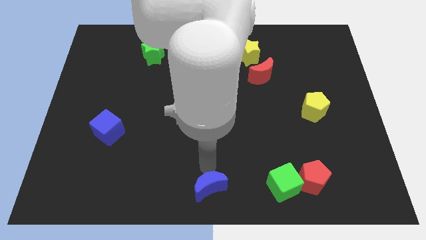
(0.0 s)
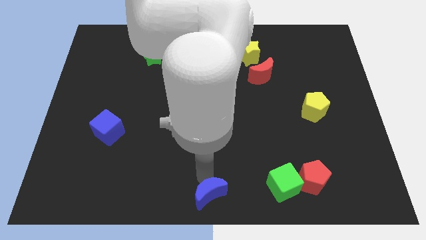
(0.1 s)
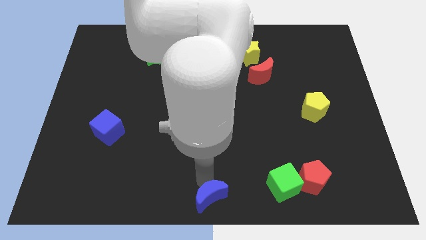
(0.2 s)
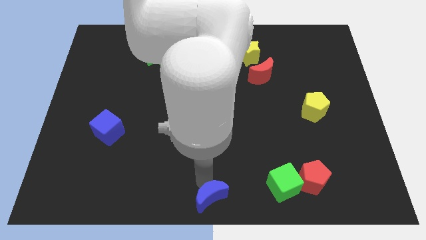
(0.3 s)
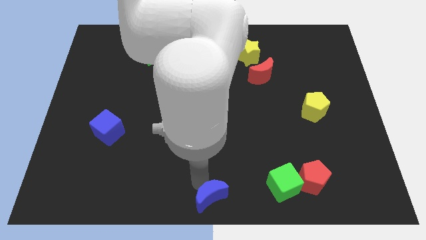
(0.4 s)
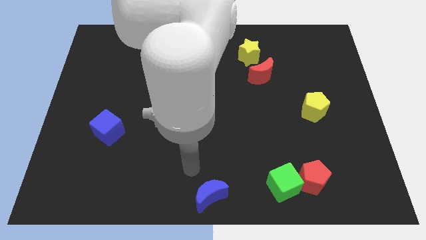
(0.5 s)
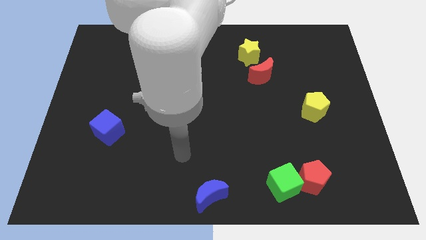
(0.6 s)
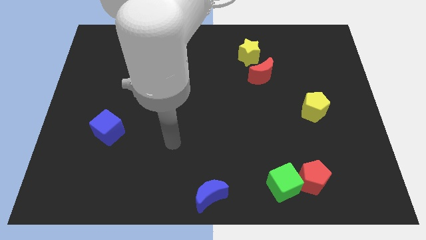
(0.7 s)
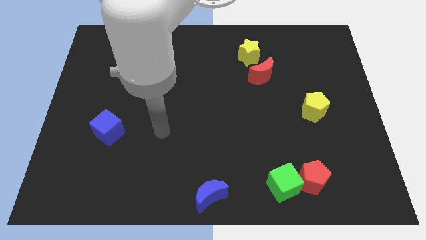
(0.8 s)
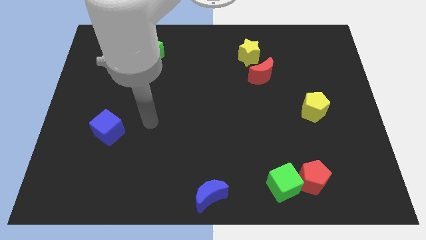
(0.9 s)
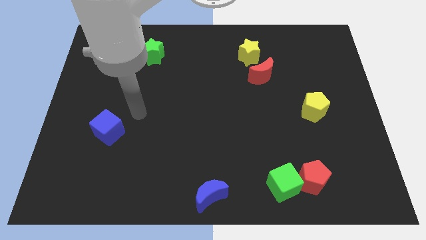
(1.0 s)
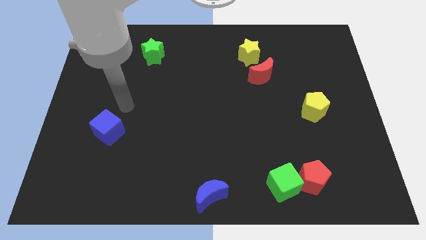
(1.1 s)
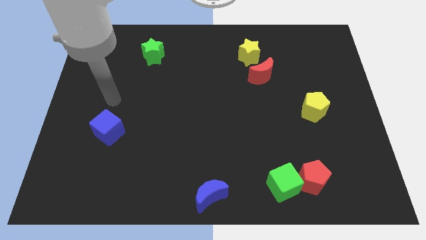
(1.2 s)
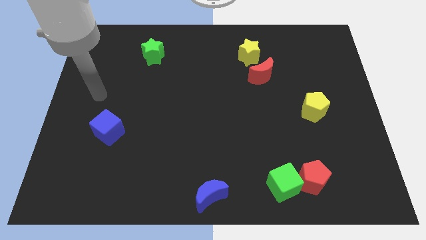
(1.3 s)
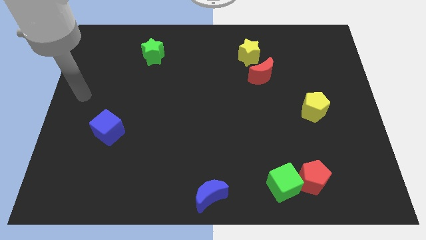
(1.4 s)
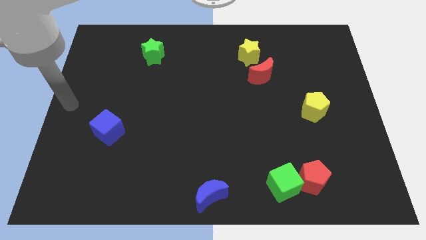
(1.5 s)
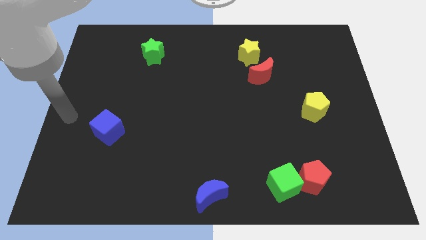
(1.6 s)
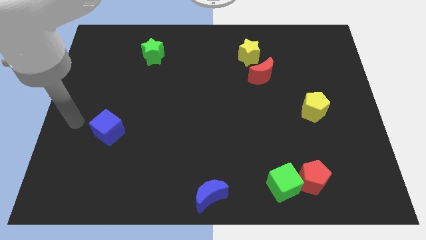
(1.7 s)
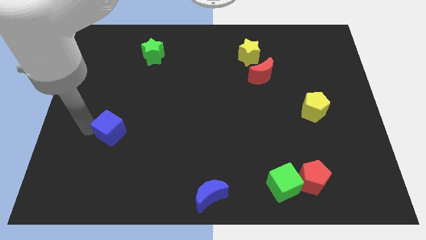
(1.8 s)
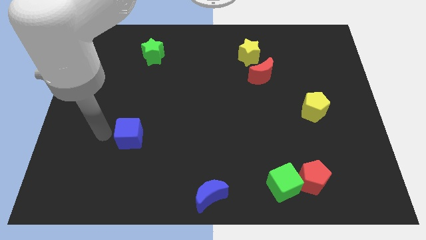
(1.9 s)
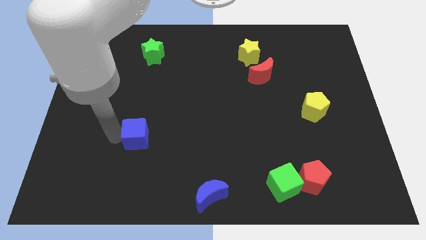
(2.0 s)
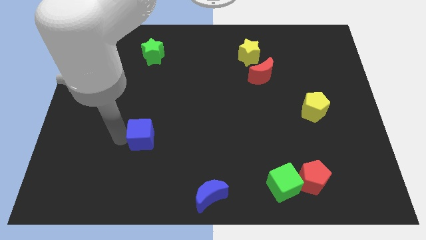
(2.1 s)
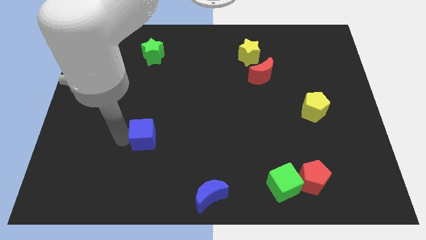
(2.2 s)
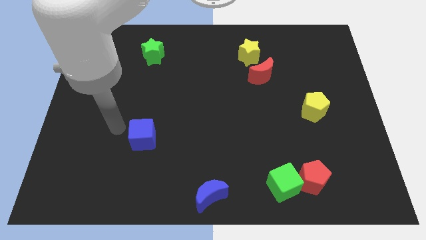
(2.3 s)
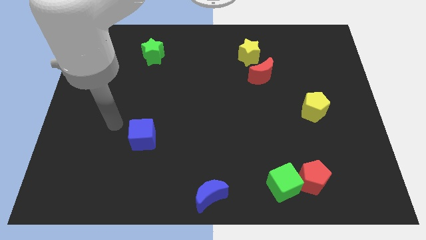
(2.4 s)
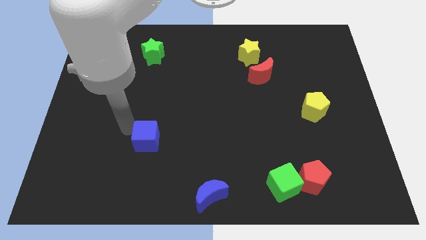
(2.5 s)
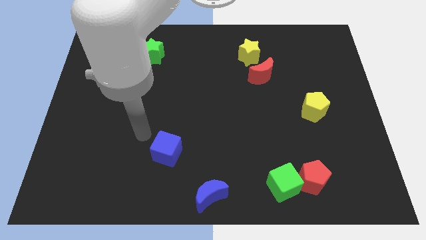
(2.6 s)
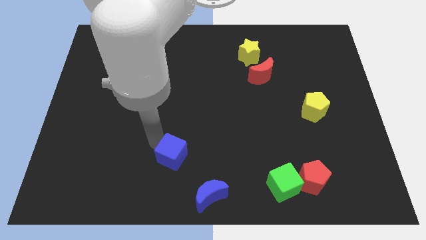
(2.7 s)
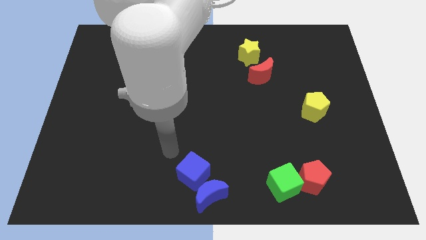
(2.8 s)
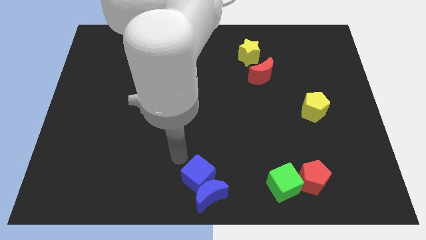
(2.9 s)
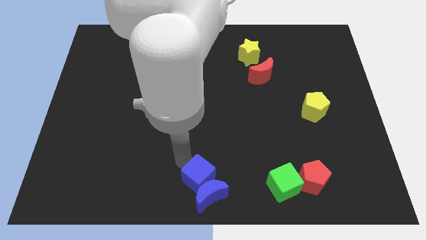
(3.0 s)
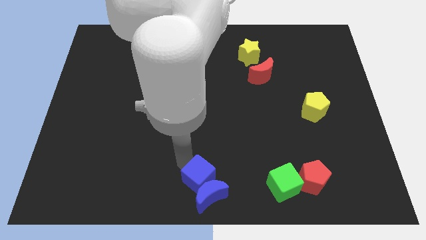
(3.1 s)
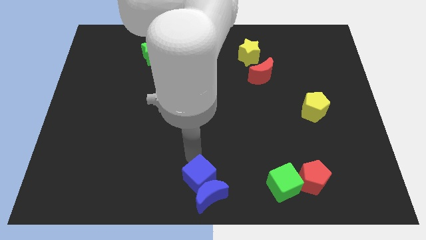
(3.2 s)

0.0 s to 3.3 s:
push the blue cube into the top of the blue crescent

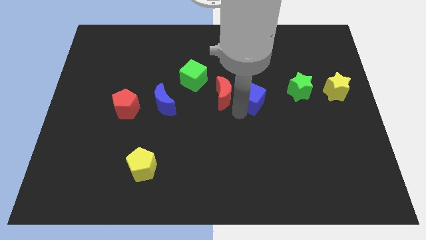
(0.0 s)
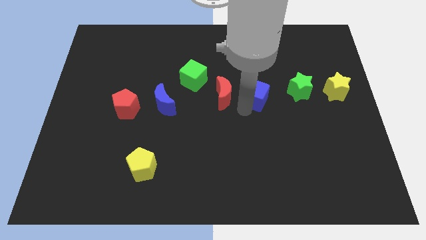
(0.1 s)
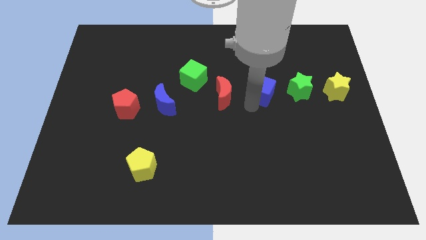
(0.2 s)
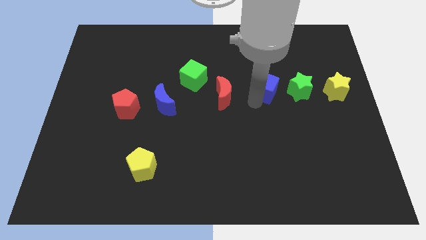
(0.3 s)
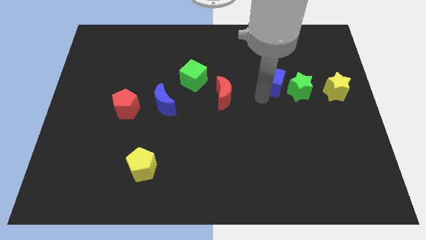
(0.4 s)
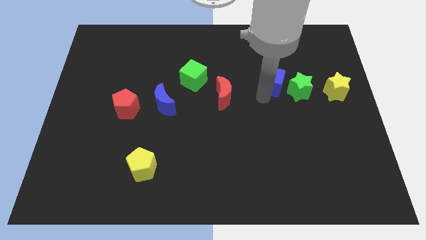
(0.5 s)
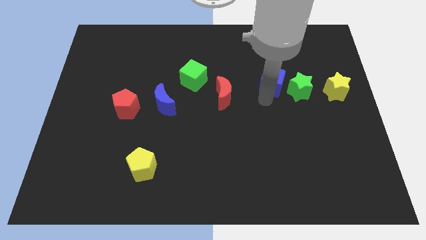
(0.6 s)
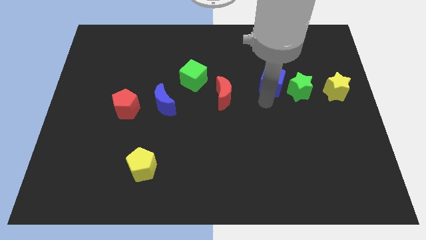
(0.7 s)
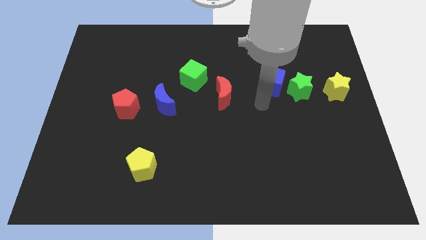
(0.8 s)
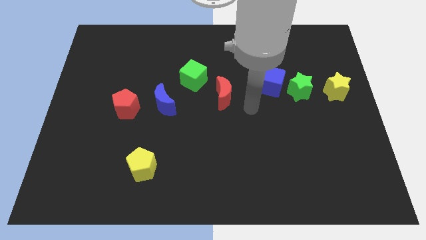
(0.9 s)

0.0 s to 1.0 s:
move blue cube left beside the green star

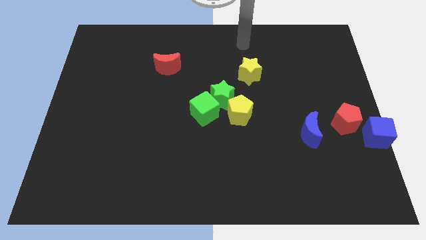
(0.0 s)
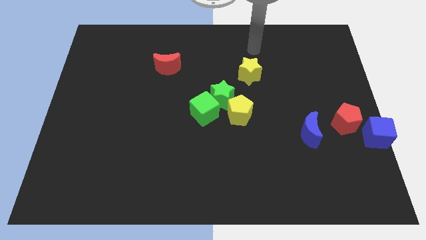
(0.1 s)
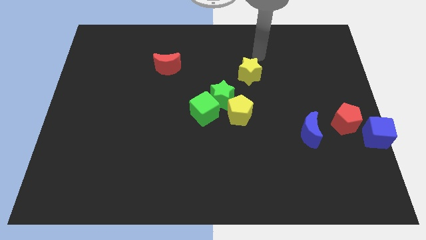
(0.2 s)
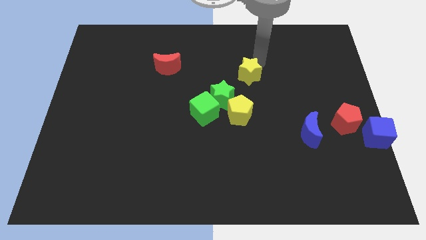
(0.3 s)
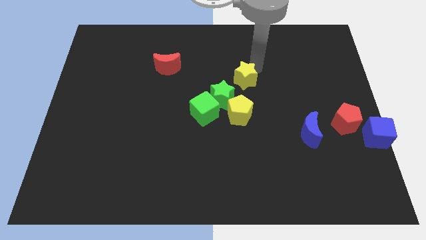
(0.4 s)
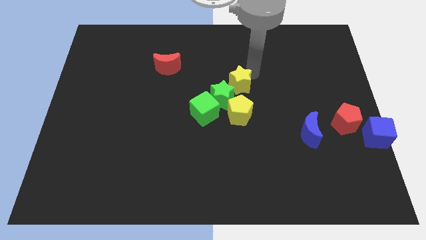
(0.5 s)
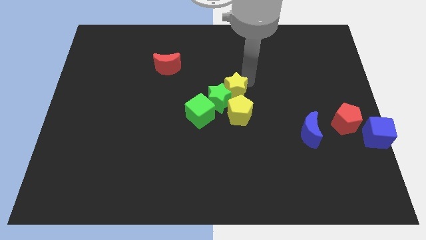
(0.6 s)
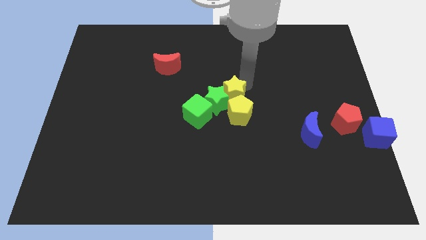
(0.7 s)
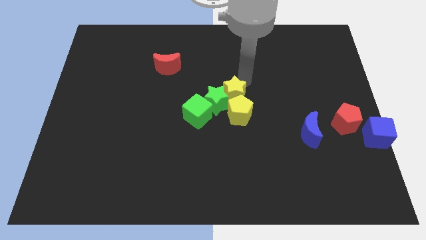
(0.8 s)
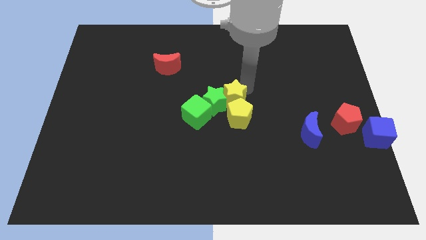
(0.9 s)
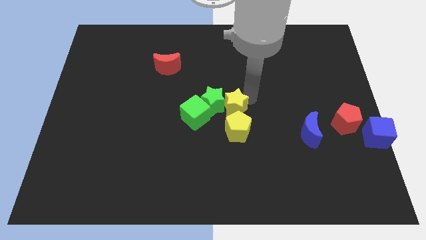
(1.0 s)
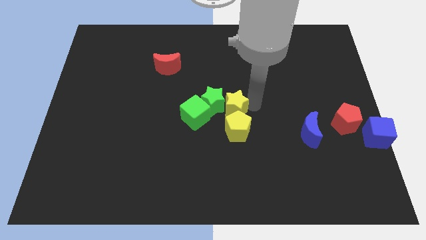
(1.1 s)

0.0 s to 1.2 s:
move the yellow star to the right of the green star

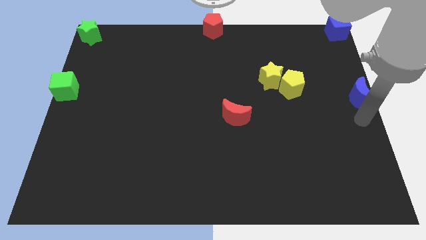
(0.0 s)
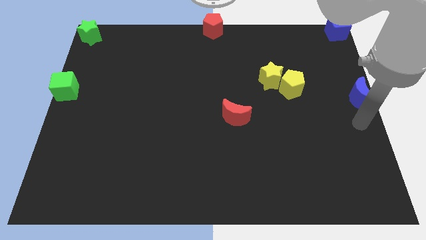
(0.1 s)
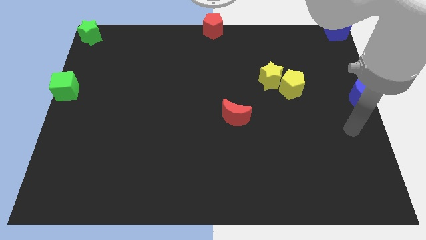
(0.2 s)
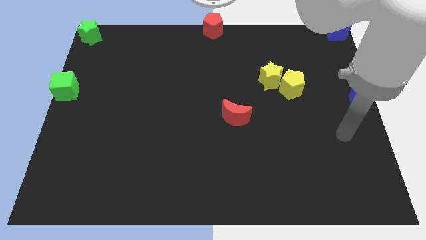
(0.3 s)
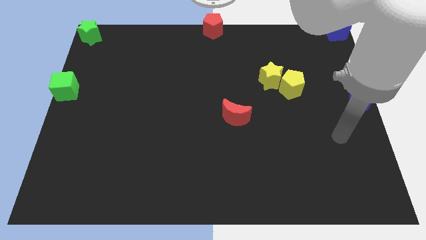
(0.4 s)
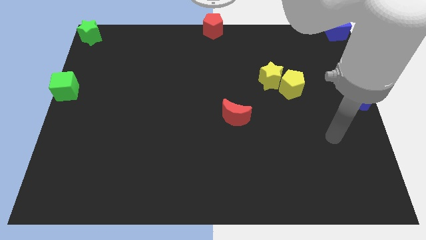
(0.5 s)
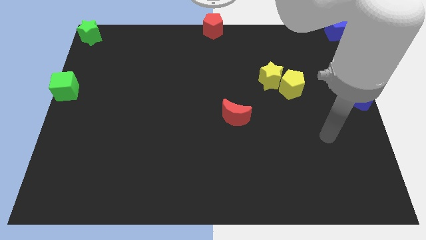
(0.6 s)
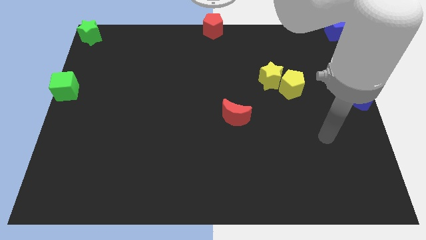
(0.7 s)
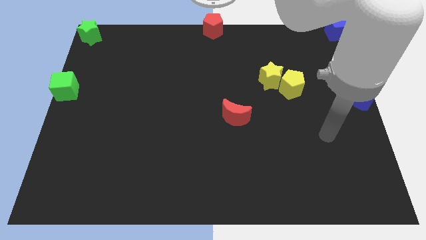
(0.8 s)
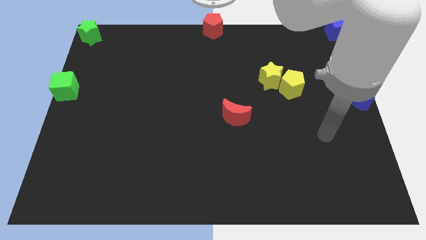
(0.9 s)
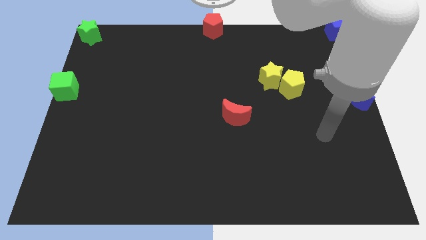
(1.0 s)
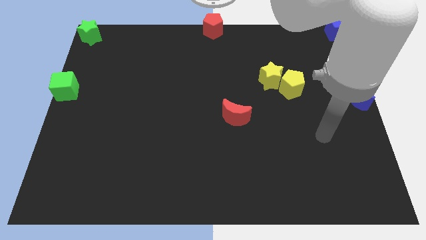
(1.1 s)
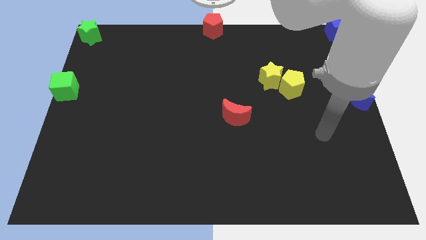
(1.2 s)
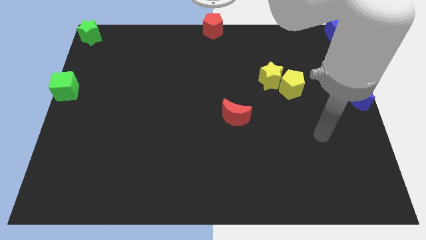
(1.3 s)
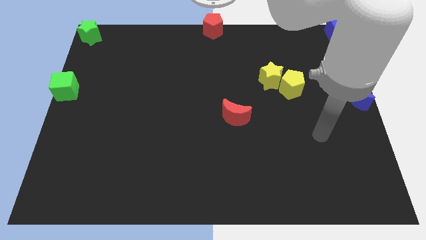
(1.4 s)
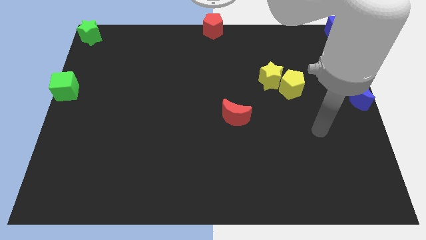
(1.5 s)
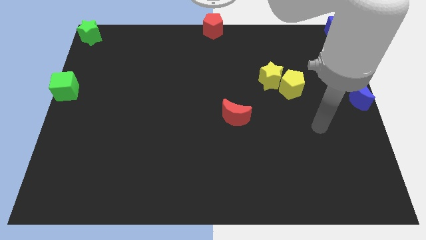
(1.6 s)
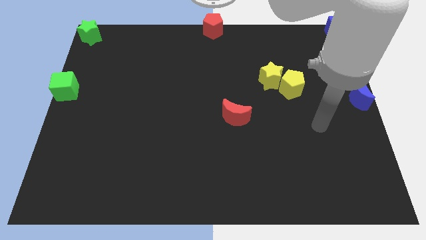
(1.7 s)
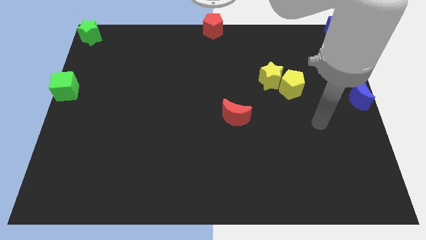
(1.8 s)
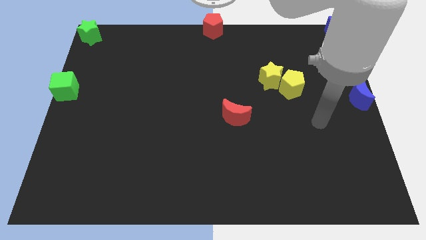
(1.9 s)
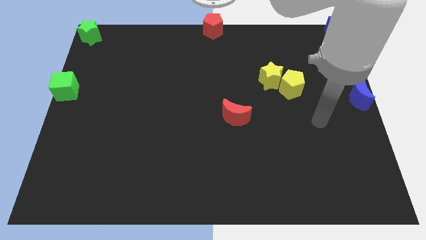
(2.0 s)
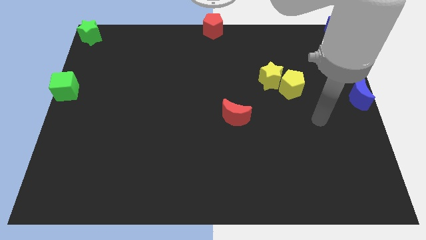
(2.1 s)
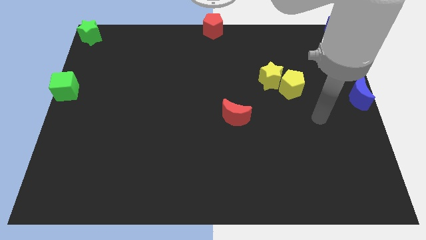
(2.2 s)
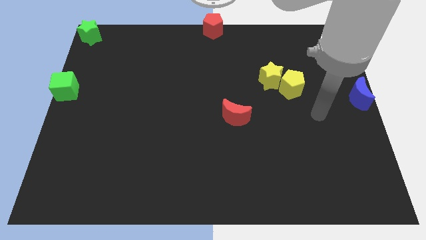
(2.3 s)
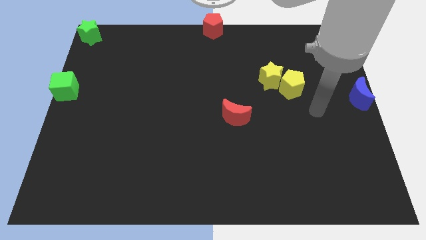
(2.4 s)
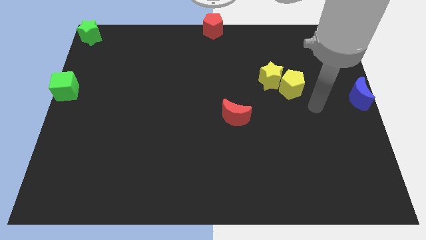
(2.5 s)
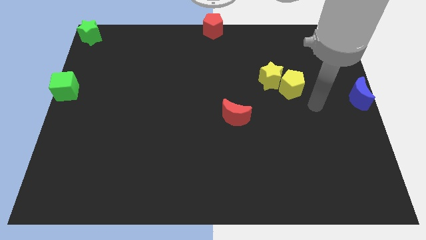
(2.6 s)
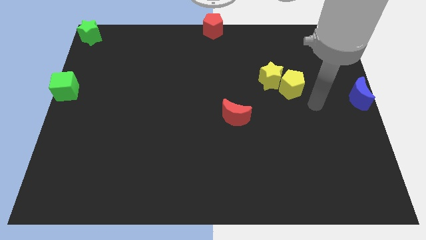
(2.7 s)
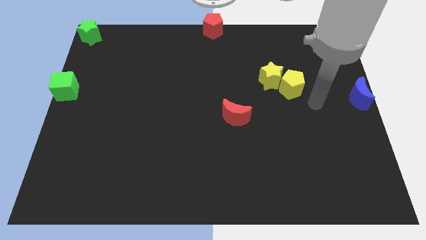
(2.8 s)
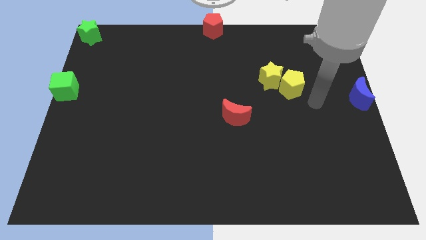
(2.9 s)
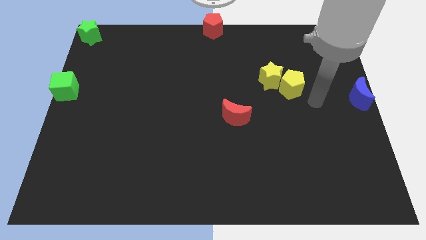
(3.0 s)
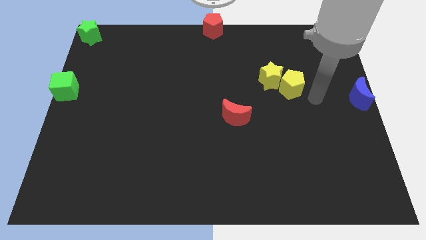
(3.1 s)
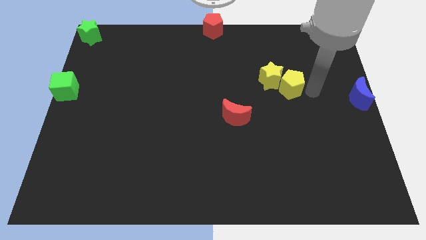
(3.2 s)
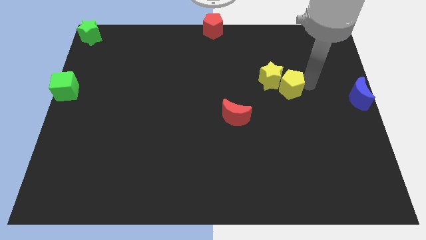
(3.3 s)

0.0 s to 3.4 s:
move the arm right to the yellow pentagon

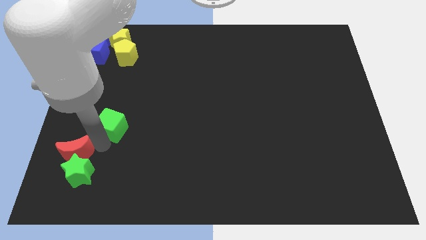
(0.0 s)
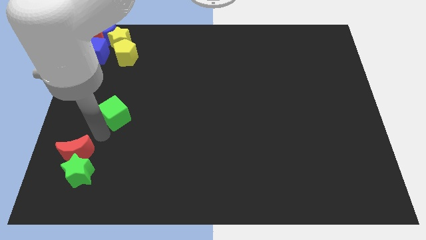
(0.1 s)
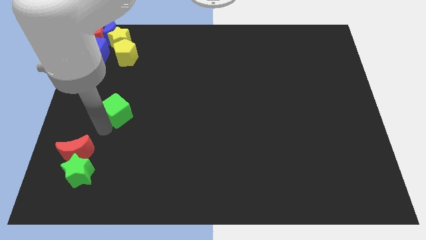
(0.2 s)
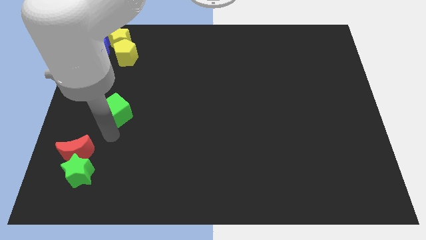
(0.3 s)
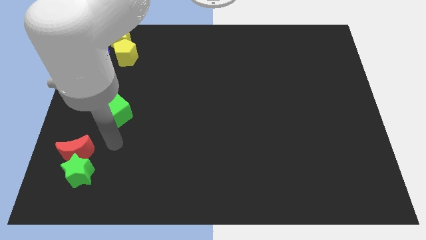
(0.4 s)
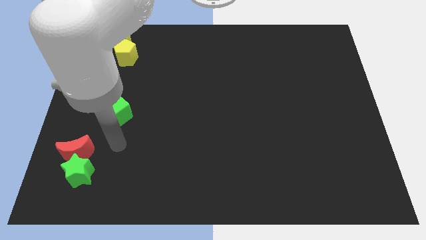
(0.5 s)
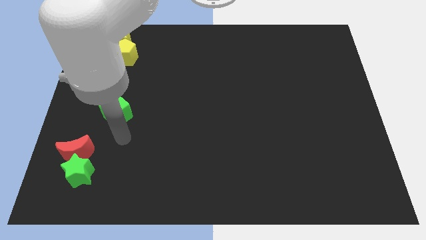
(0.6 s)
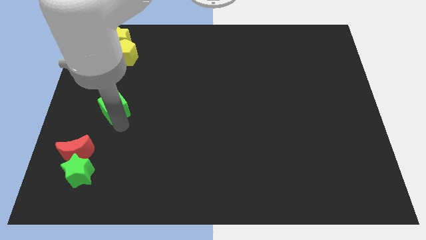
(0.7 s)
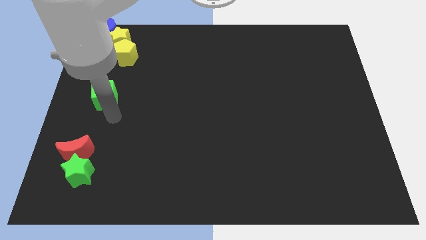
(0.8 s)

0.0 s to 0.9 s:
push the green cube slightly towards the right center of the board
